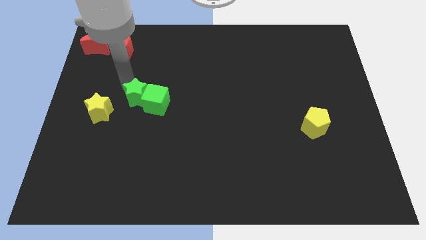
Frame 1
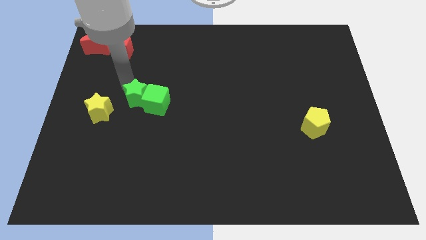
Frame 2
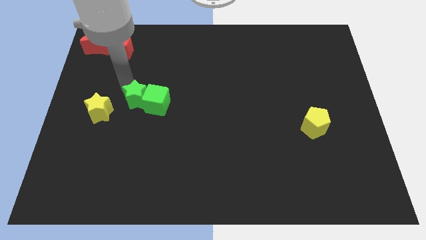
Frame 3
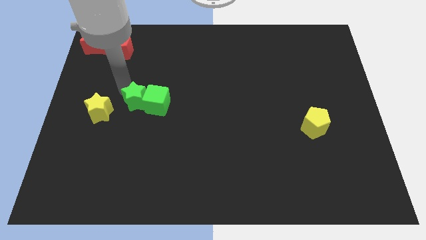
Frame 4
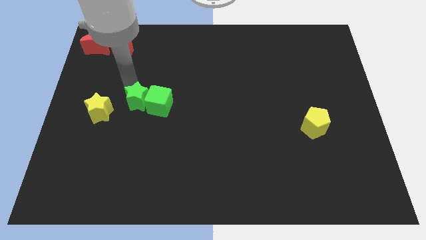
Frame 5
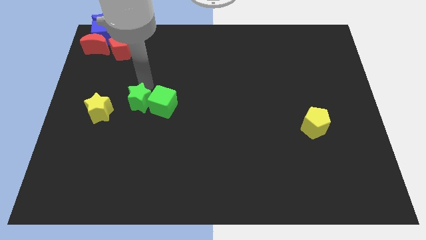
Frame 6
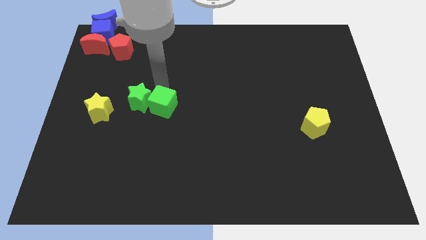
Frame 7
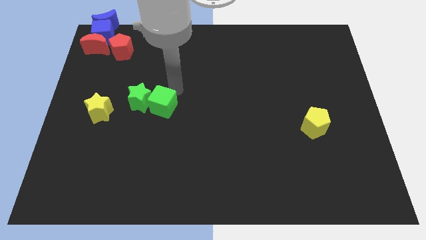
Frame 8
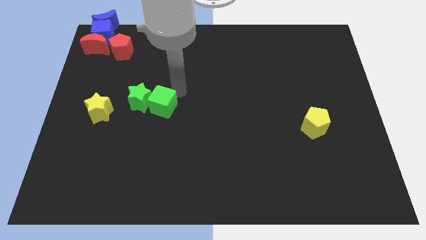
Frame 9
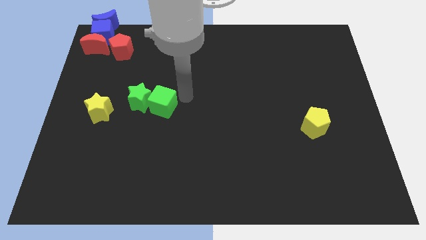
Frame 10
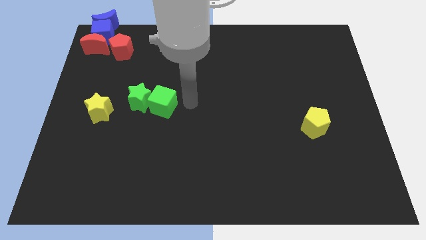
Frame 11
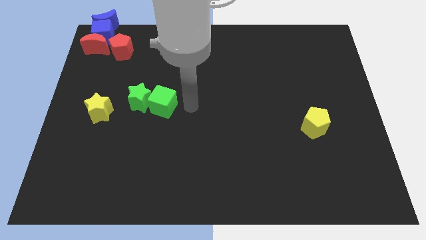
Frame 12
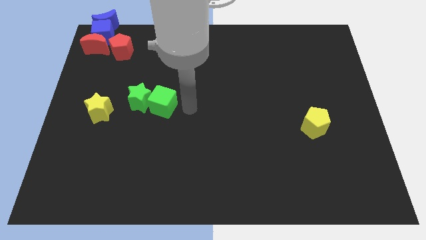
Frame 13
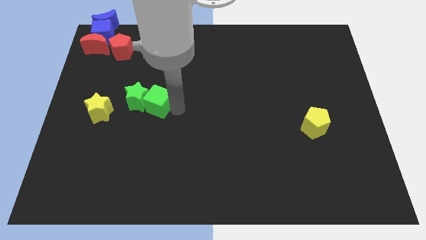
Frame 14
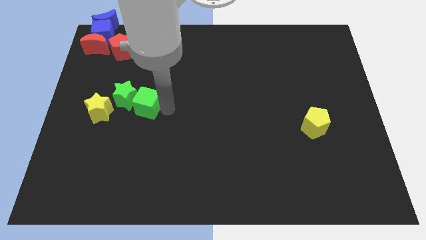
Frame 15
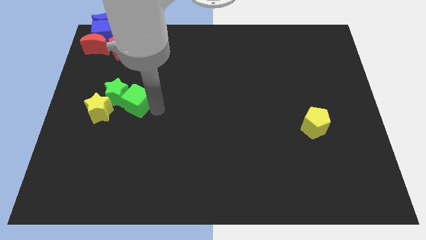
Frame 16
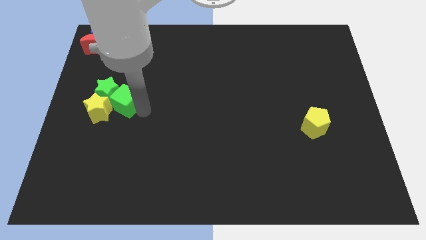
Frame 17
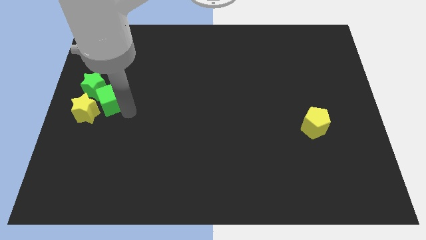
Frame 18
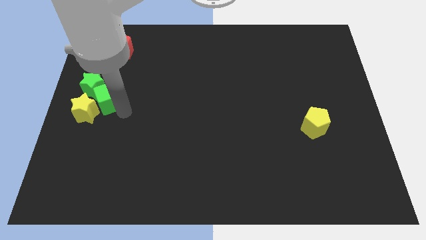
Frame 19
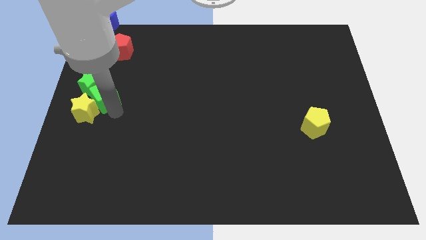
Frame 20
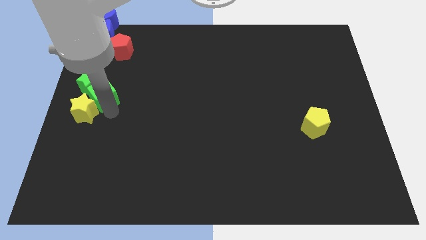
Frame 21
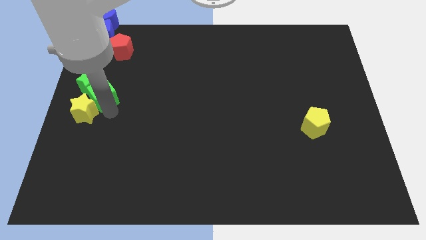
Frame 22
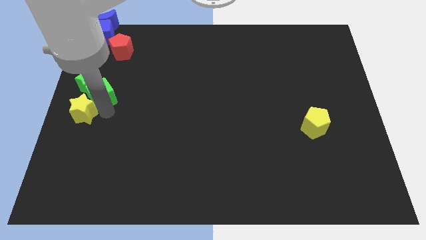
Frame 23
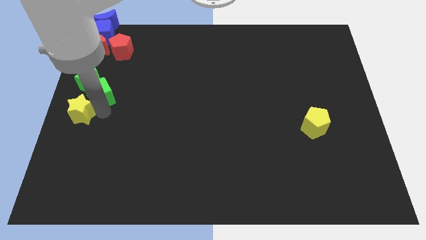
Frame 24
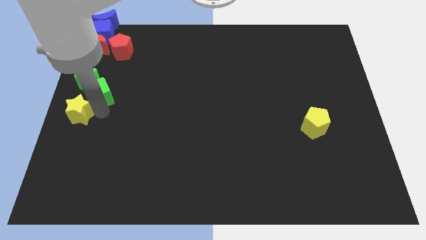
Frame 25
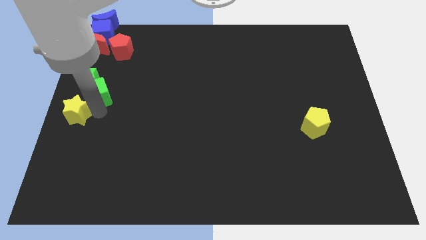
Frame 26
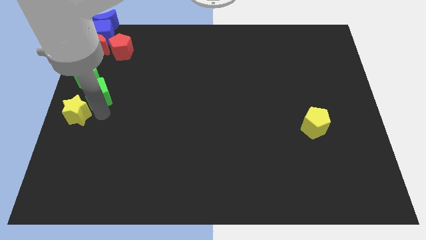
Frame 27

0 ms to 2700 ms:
push green blocks near the yellow star

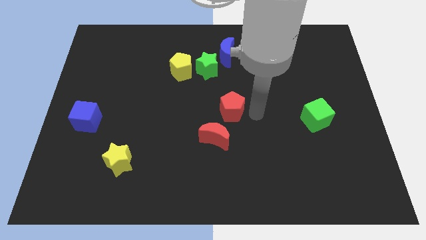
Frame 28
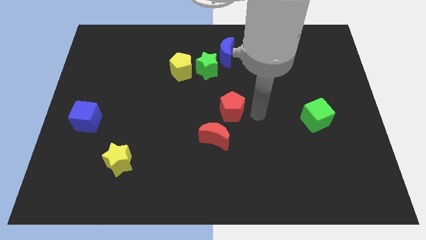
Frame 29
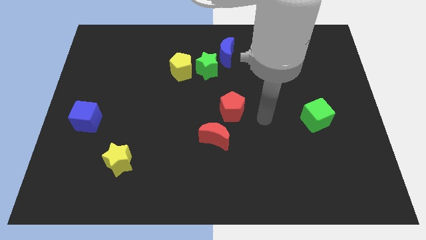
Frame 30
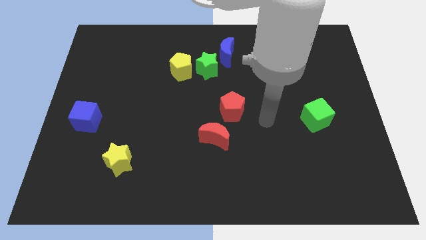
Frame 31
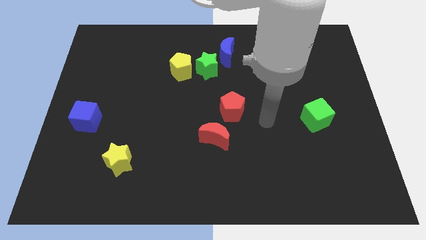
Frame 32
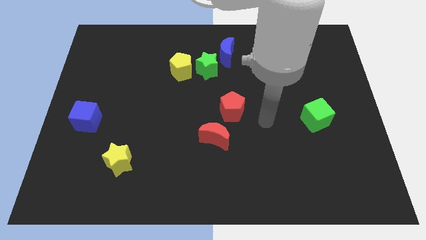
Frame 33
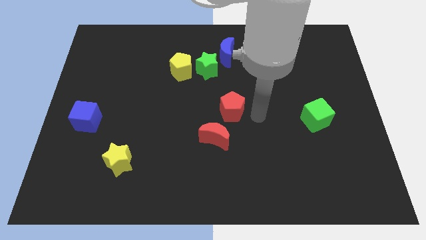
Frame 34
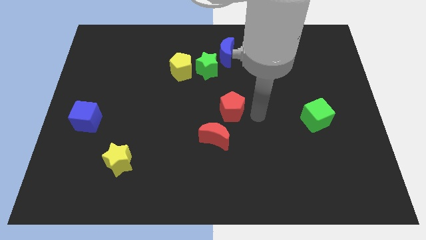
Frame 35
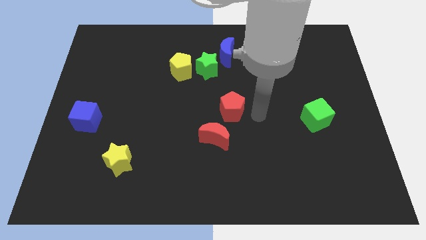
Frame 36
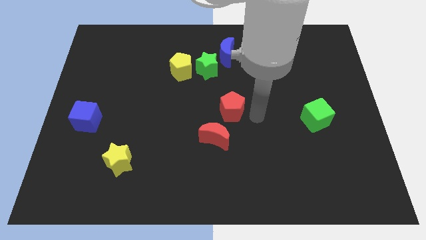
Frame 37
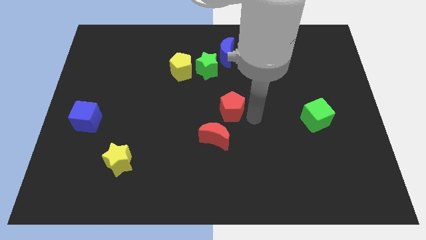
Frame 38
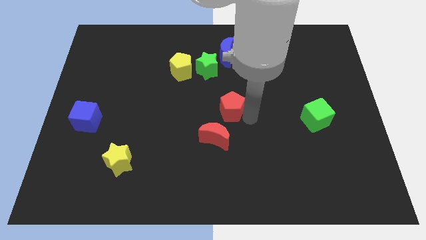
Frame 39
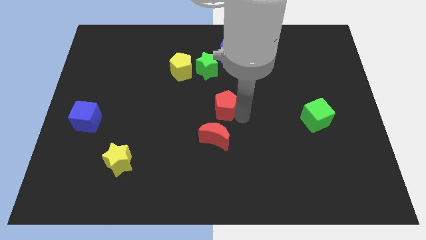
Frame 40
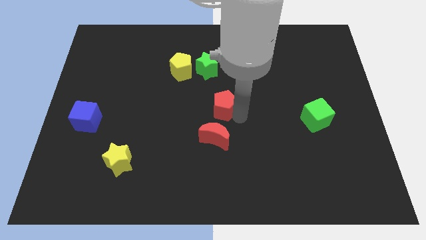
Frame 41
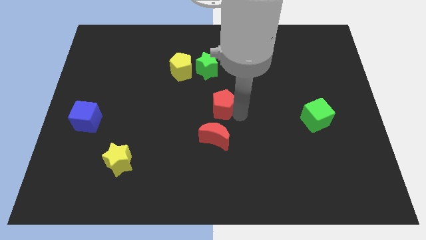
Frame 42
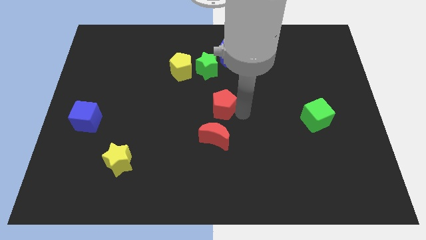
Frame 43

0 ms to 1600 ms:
slightly push the red pentagon towards the center

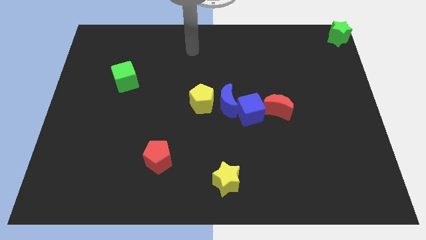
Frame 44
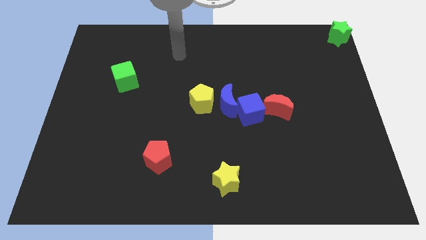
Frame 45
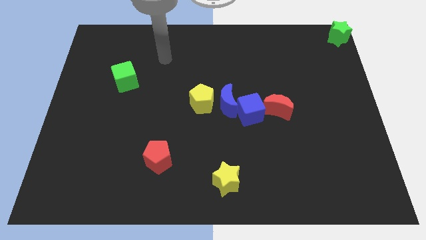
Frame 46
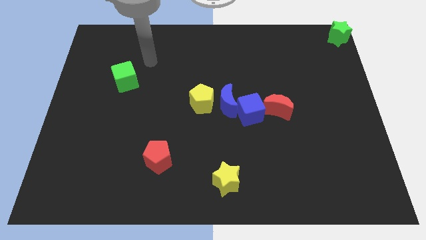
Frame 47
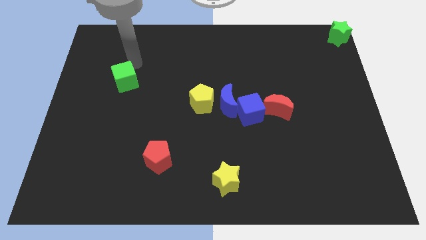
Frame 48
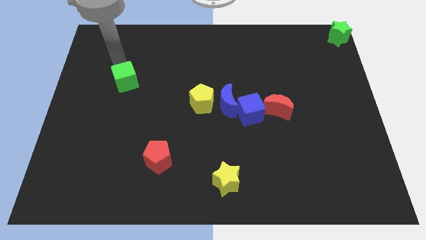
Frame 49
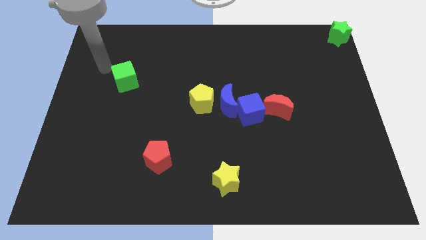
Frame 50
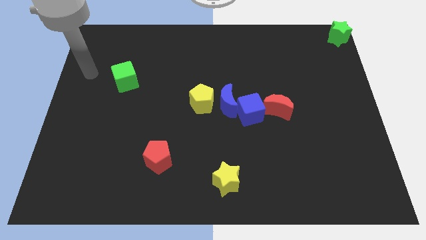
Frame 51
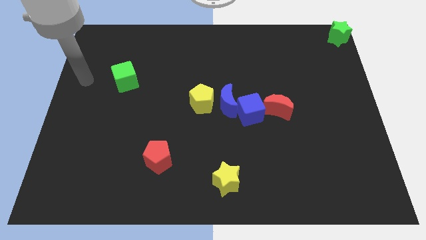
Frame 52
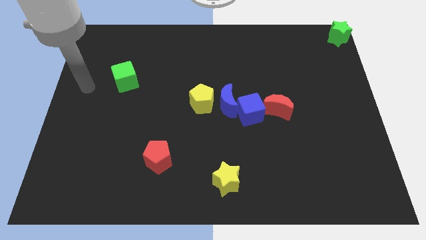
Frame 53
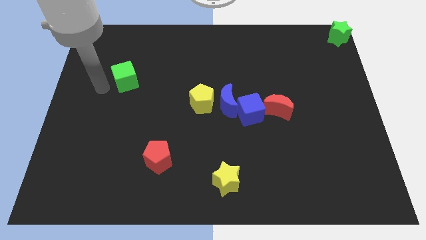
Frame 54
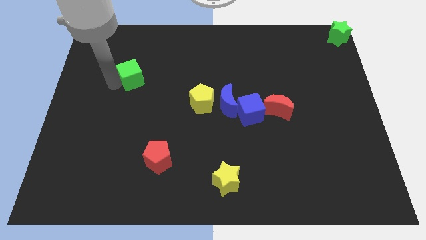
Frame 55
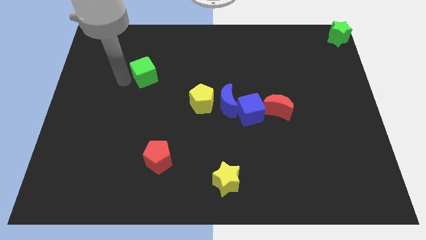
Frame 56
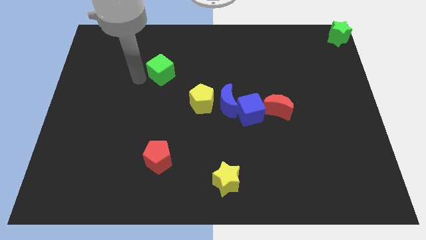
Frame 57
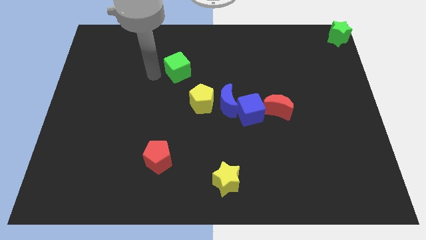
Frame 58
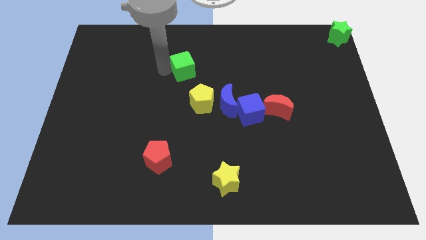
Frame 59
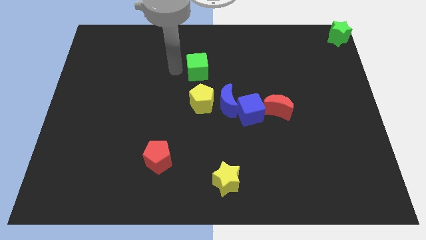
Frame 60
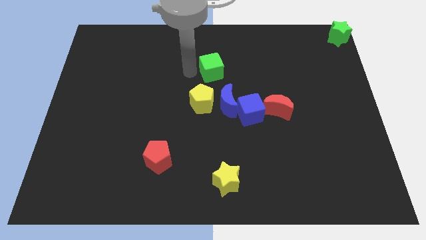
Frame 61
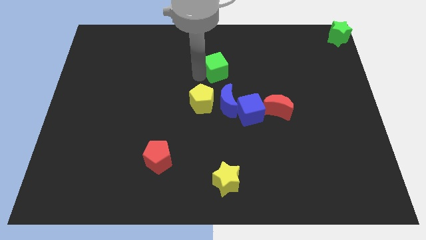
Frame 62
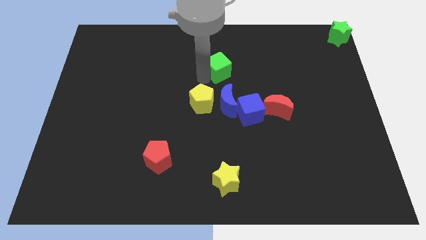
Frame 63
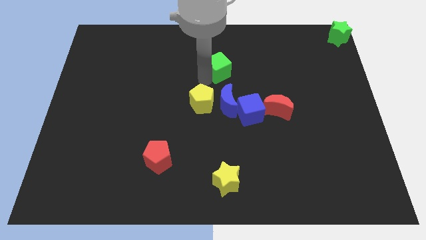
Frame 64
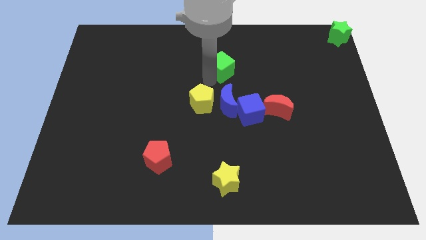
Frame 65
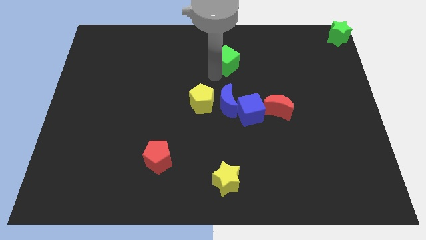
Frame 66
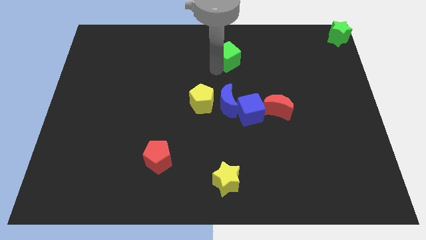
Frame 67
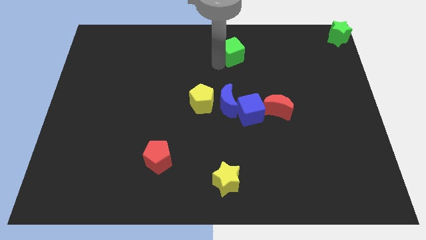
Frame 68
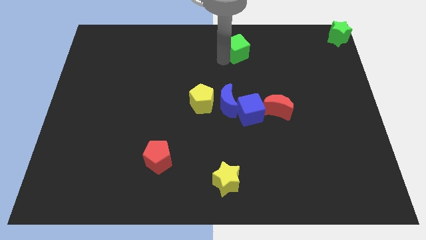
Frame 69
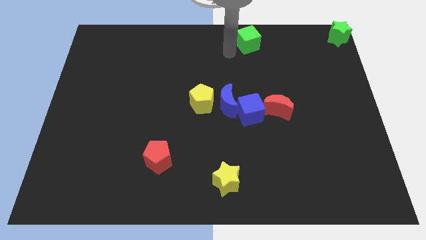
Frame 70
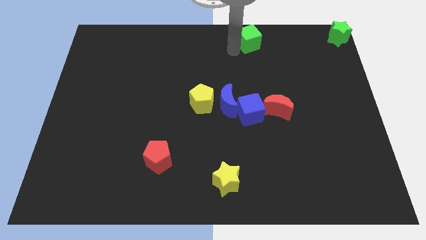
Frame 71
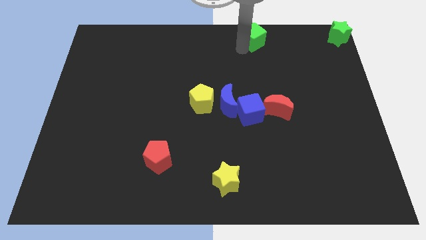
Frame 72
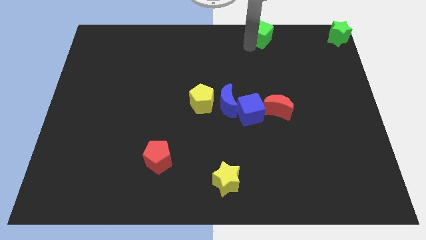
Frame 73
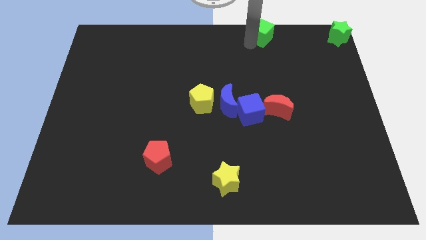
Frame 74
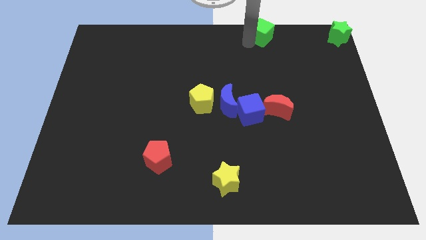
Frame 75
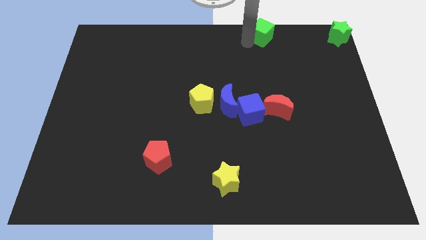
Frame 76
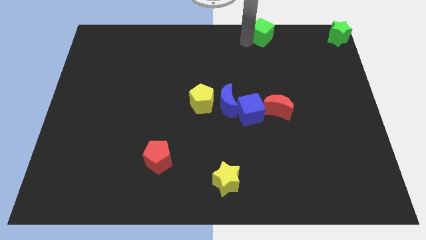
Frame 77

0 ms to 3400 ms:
place the green cube parallel to the green star

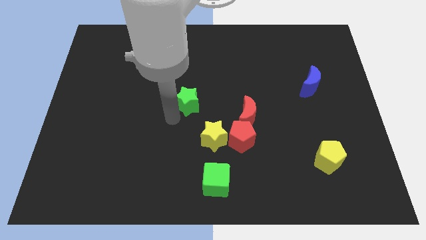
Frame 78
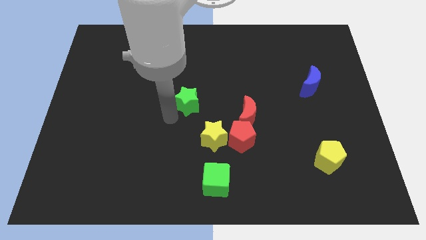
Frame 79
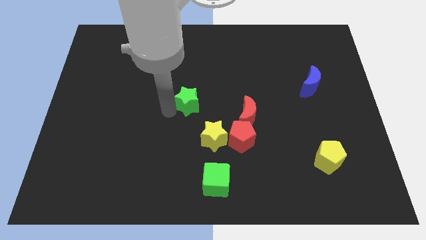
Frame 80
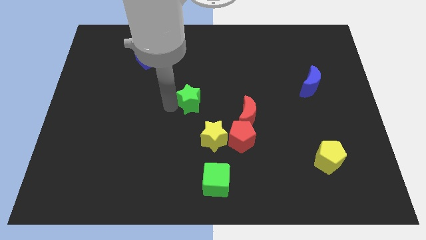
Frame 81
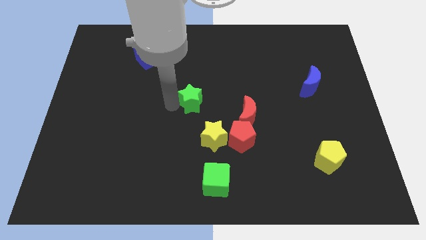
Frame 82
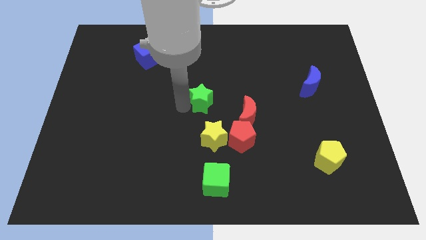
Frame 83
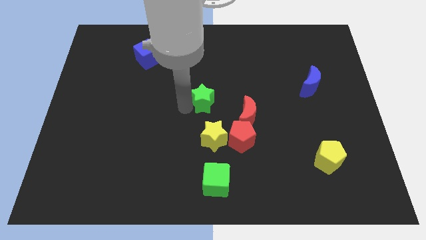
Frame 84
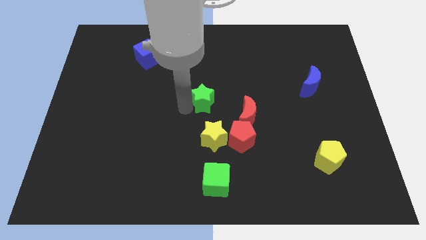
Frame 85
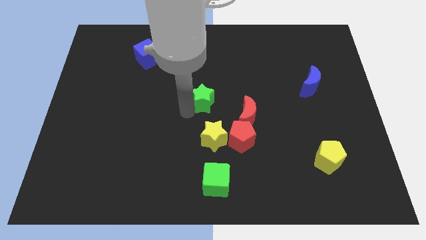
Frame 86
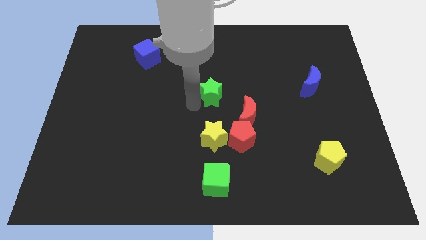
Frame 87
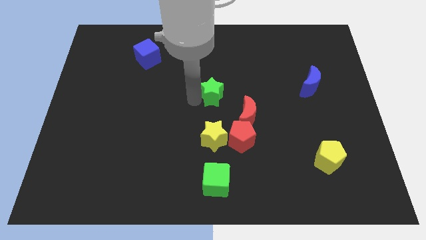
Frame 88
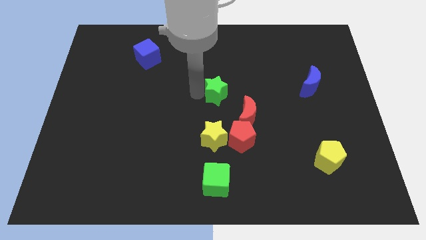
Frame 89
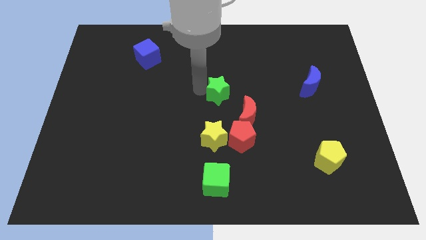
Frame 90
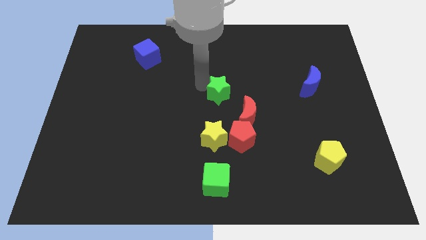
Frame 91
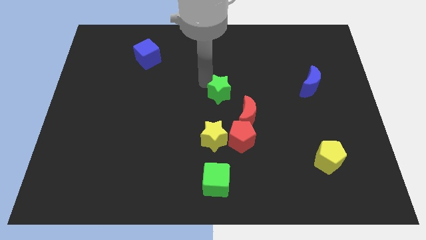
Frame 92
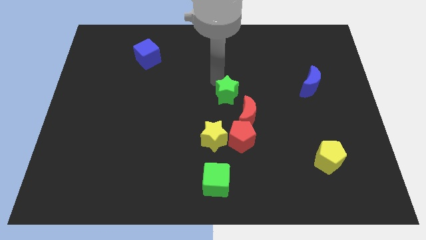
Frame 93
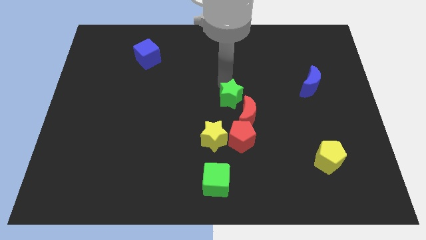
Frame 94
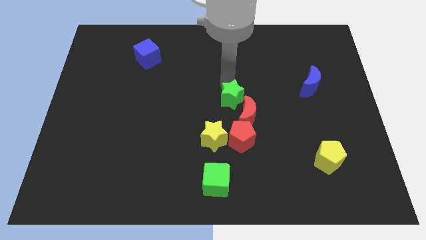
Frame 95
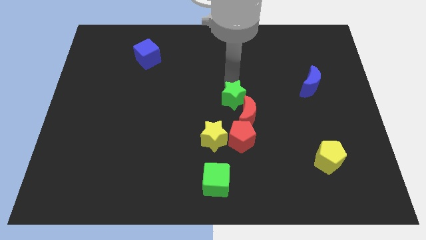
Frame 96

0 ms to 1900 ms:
push the green star to the left of red crescent
